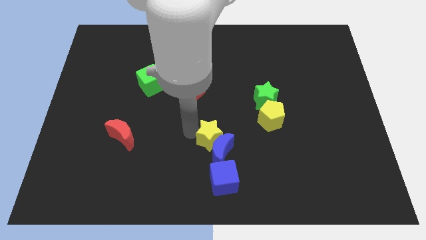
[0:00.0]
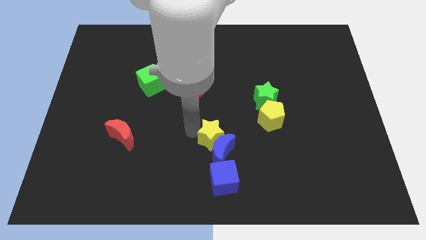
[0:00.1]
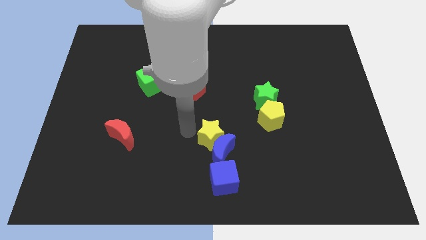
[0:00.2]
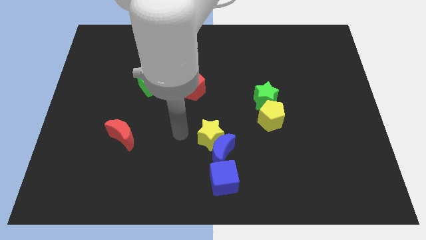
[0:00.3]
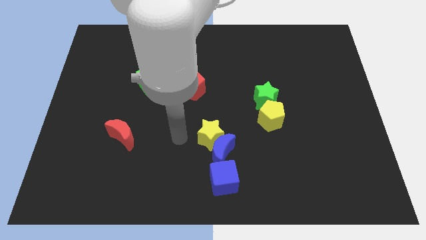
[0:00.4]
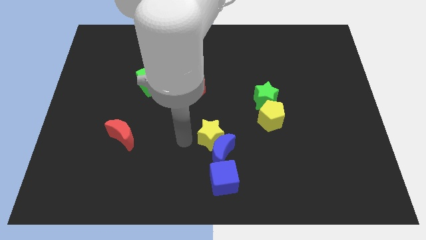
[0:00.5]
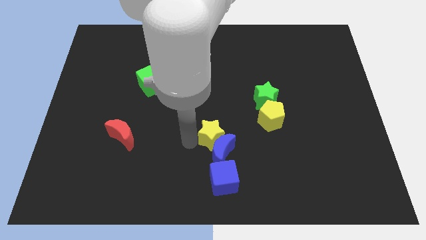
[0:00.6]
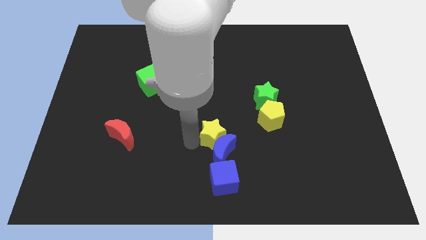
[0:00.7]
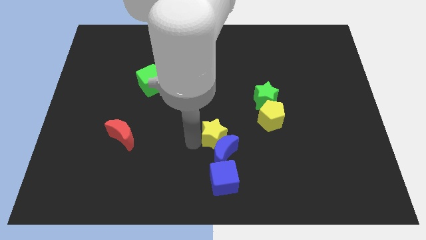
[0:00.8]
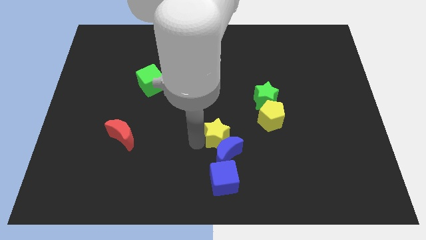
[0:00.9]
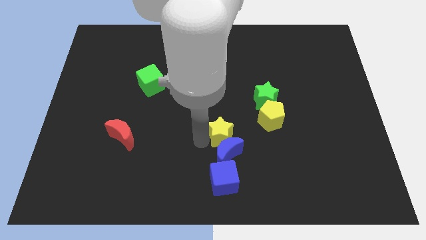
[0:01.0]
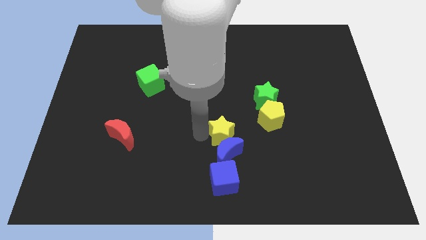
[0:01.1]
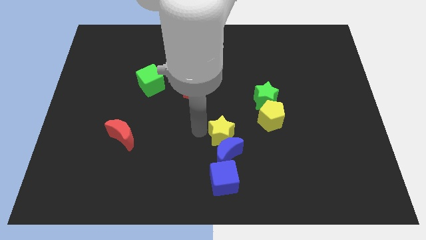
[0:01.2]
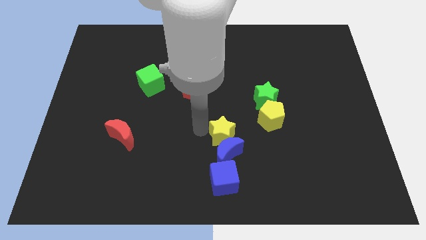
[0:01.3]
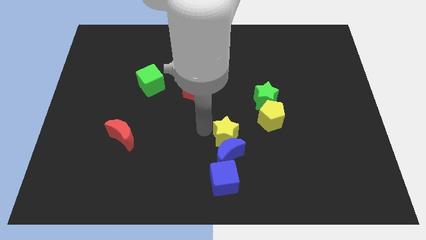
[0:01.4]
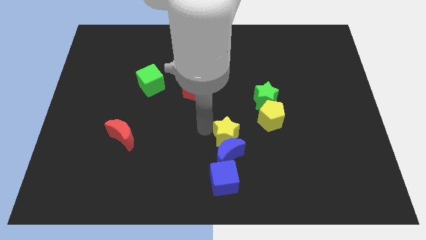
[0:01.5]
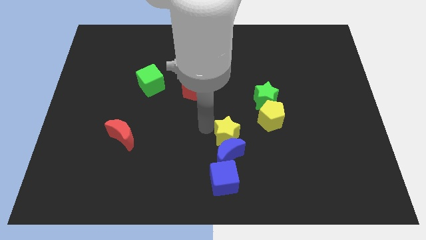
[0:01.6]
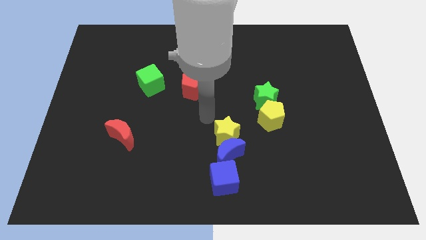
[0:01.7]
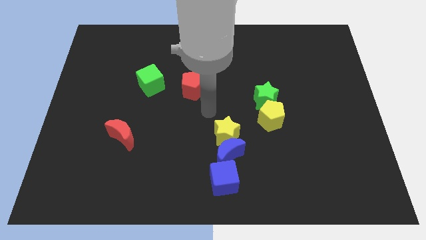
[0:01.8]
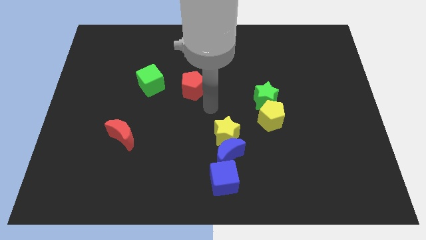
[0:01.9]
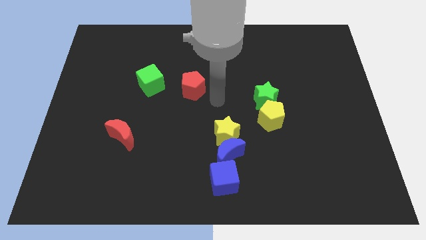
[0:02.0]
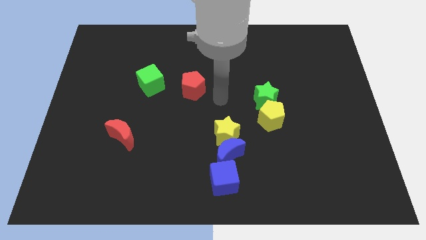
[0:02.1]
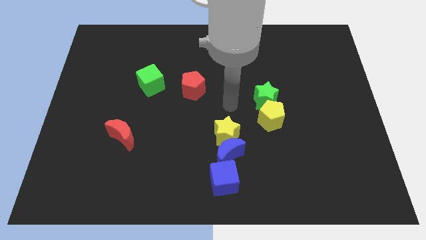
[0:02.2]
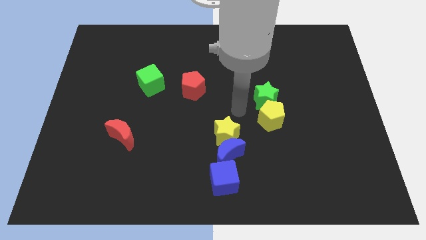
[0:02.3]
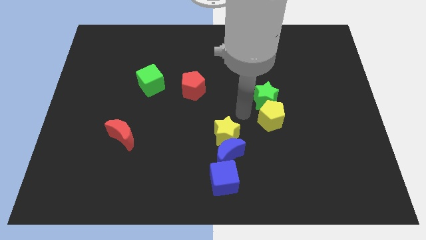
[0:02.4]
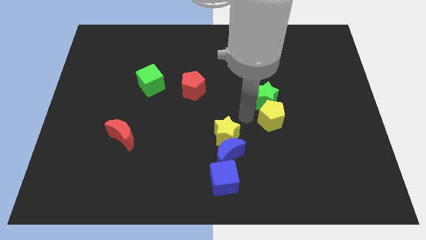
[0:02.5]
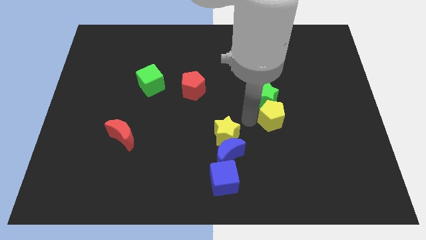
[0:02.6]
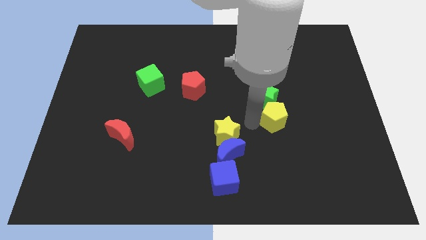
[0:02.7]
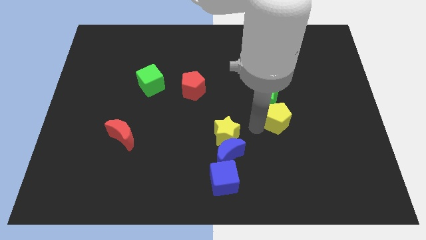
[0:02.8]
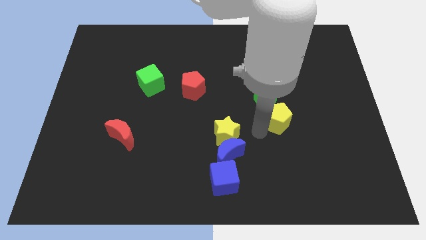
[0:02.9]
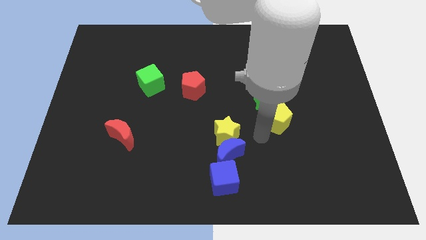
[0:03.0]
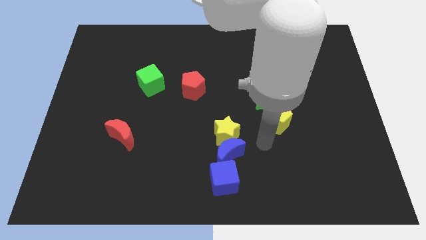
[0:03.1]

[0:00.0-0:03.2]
move the yellow star to the top left of the blue moon

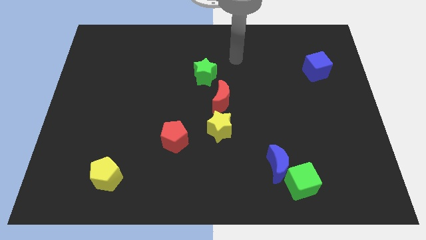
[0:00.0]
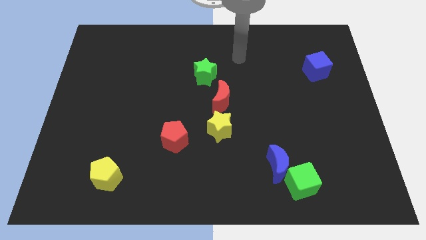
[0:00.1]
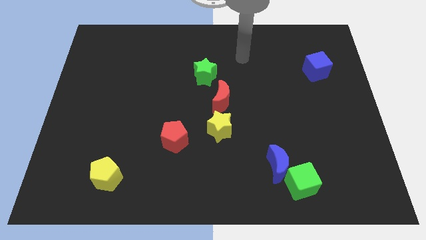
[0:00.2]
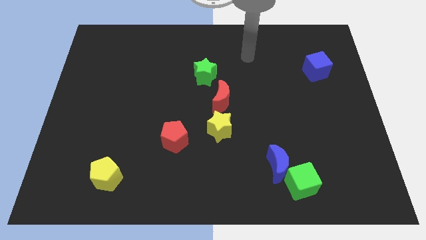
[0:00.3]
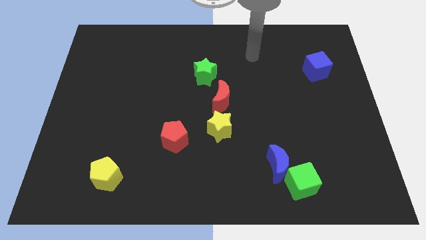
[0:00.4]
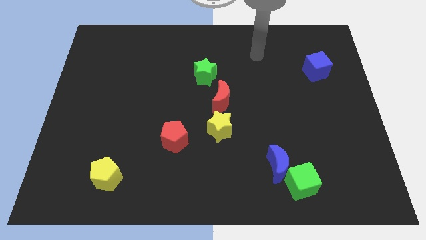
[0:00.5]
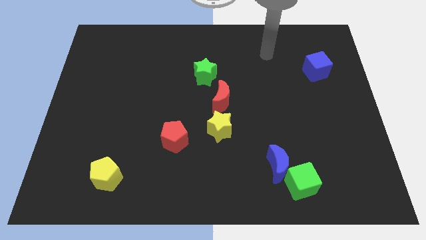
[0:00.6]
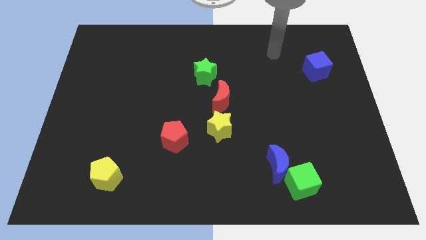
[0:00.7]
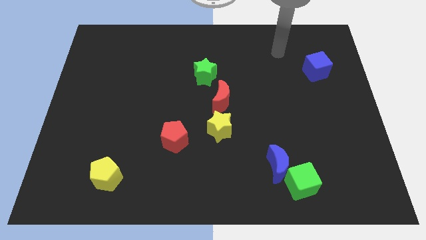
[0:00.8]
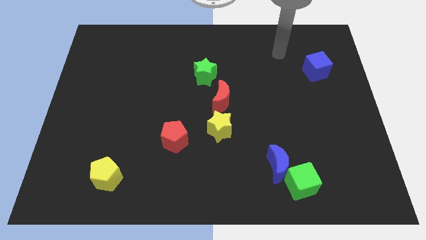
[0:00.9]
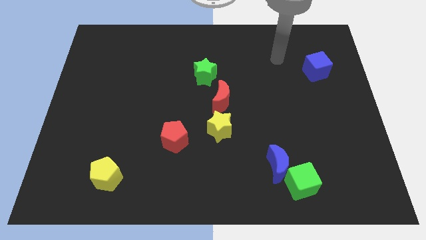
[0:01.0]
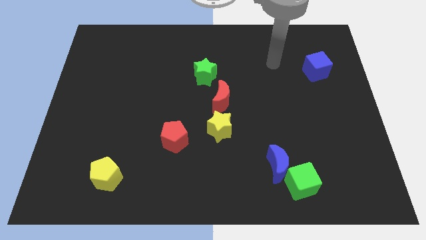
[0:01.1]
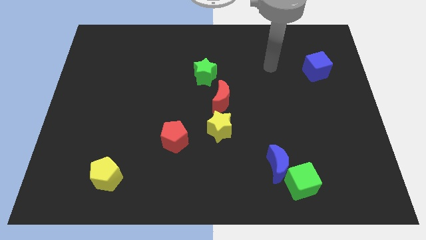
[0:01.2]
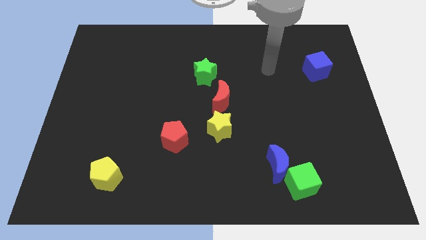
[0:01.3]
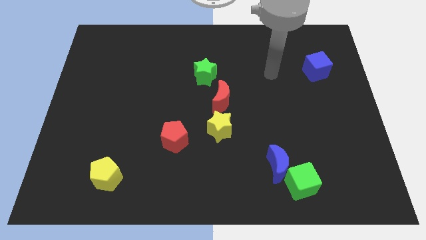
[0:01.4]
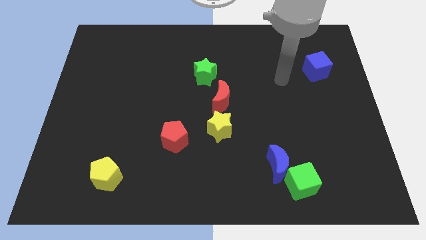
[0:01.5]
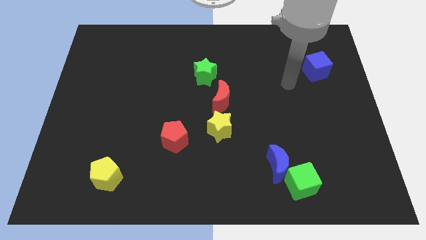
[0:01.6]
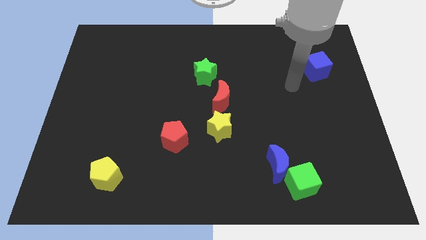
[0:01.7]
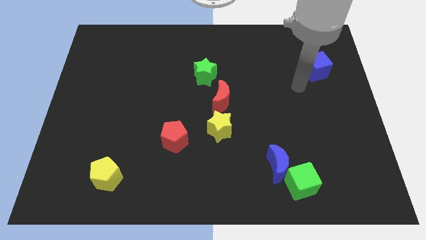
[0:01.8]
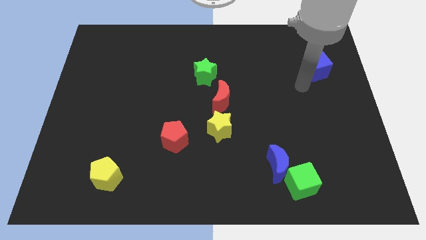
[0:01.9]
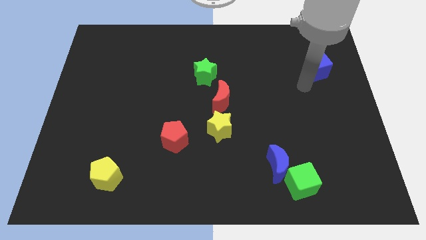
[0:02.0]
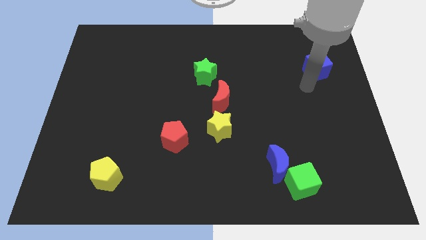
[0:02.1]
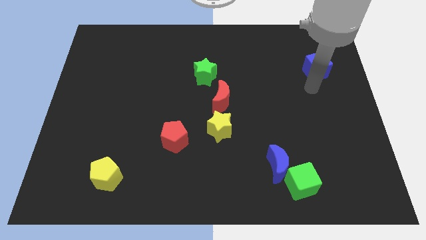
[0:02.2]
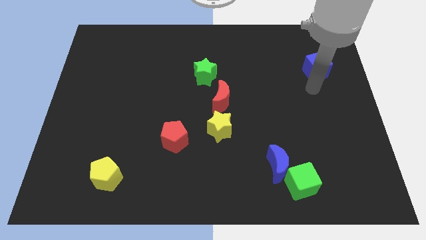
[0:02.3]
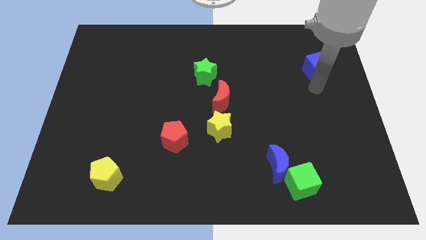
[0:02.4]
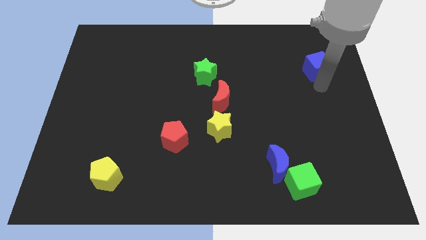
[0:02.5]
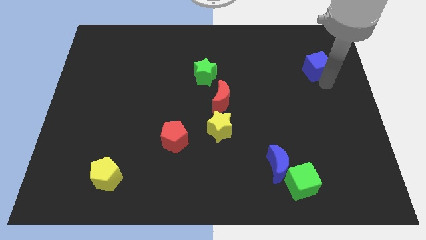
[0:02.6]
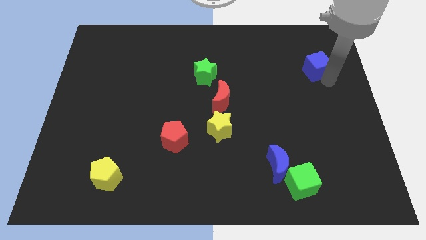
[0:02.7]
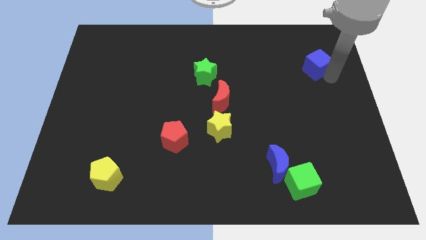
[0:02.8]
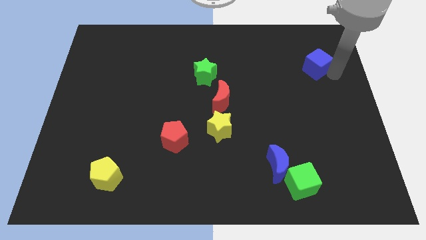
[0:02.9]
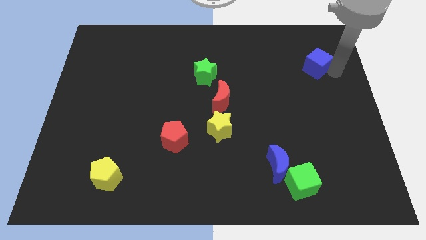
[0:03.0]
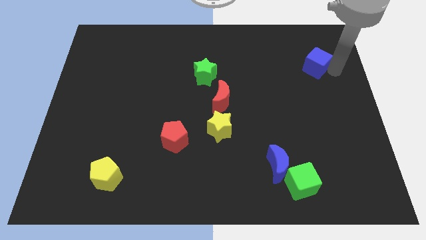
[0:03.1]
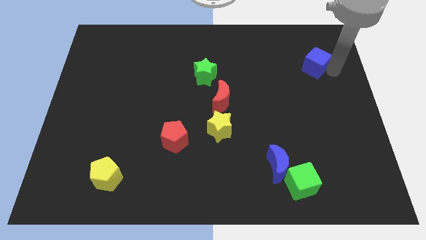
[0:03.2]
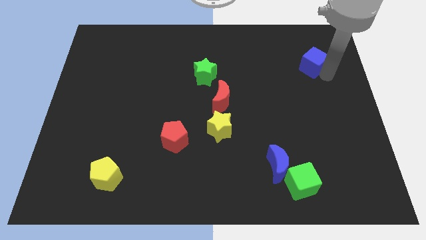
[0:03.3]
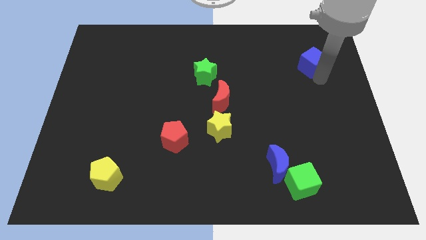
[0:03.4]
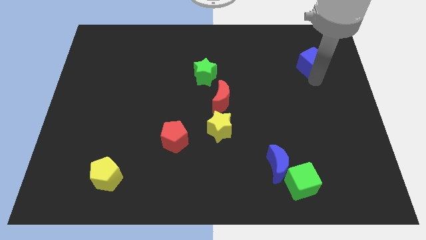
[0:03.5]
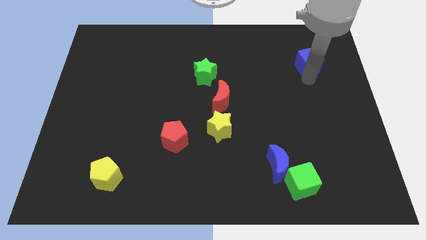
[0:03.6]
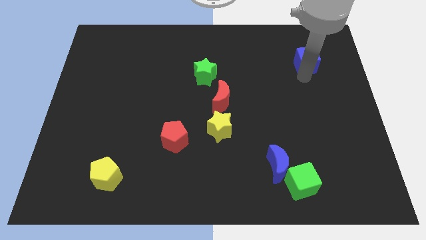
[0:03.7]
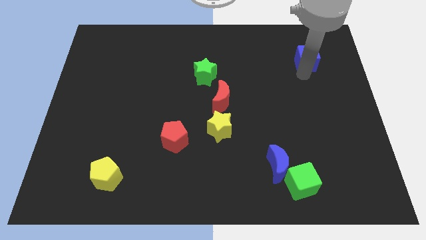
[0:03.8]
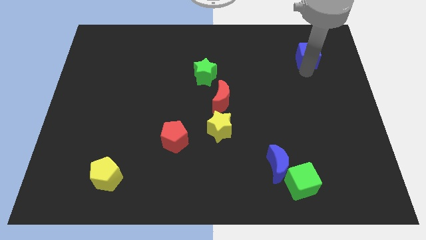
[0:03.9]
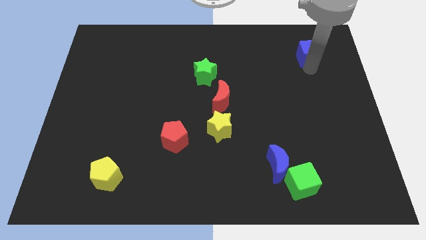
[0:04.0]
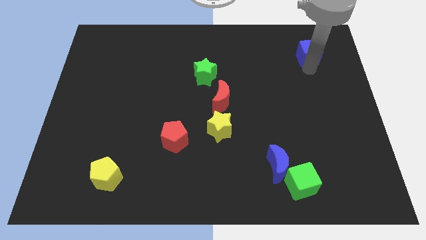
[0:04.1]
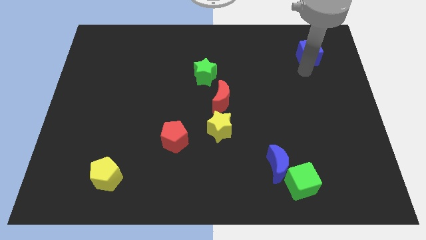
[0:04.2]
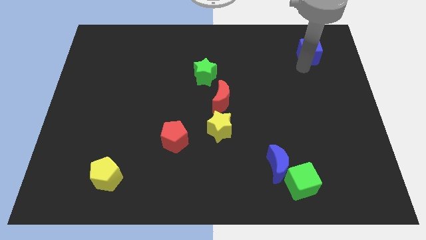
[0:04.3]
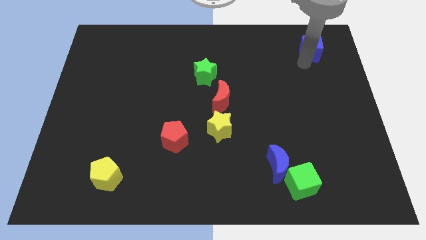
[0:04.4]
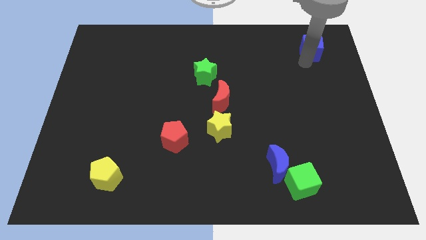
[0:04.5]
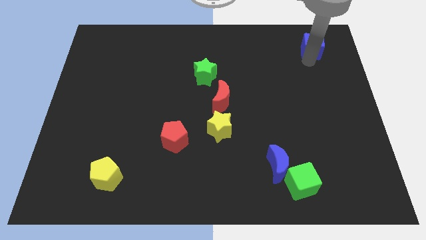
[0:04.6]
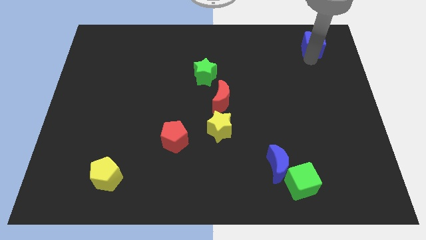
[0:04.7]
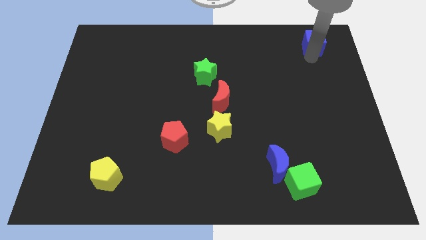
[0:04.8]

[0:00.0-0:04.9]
move the blue cube to the top side of the board

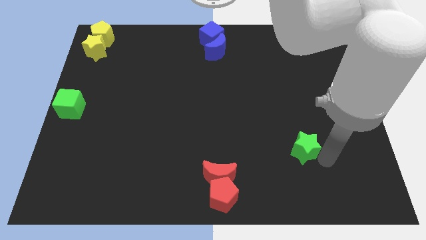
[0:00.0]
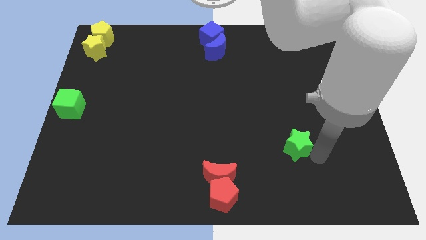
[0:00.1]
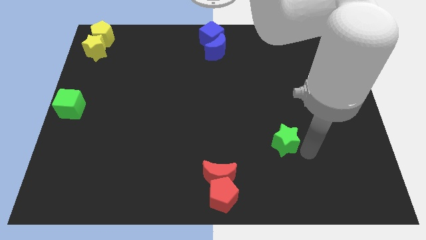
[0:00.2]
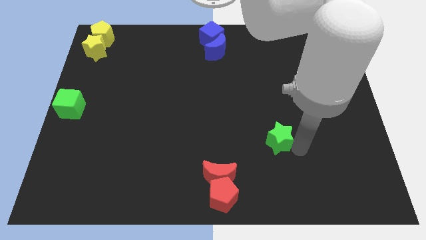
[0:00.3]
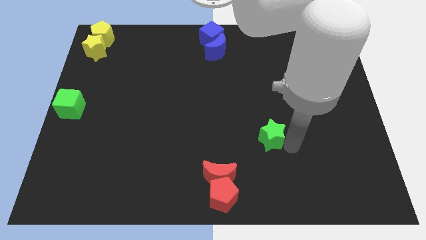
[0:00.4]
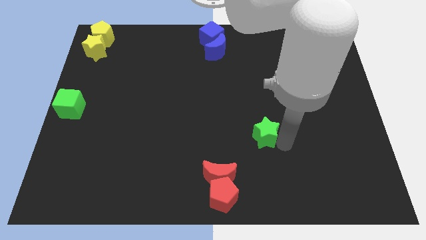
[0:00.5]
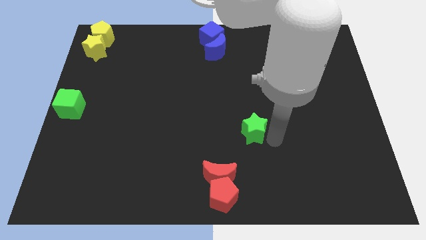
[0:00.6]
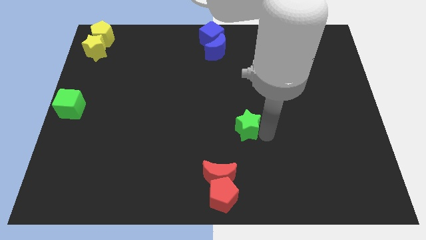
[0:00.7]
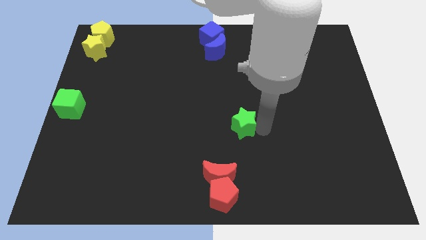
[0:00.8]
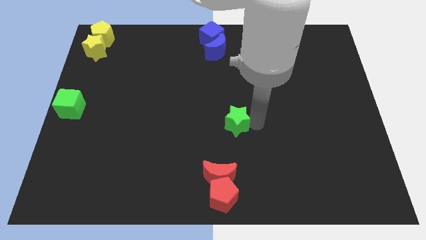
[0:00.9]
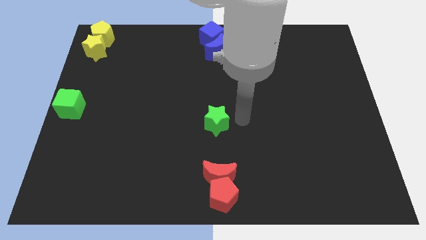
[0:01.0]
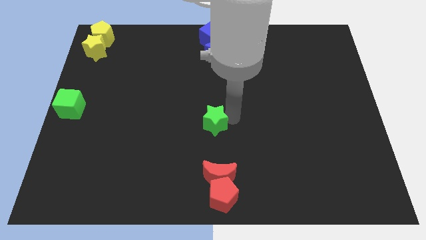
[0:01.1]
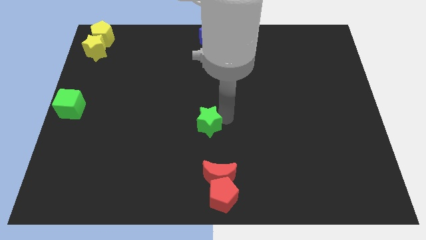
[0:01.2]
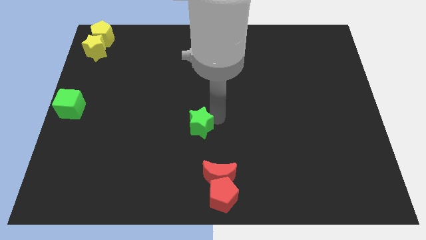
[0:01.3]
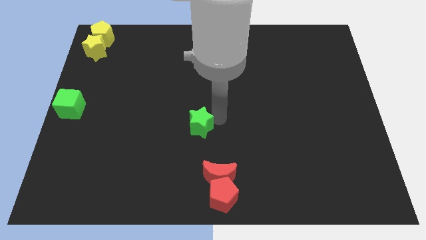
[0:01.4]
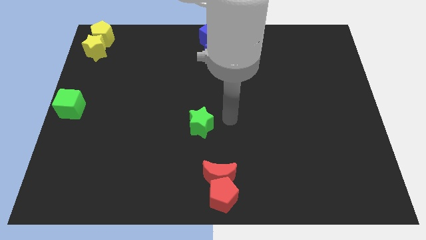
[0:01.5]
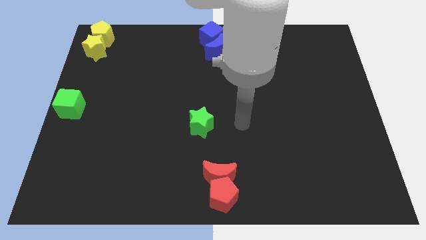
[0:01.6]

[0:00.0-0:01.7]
move the green star towards center of the board
